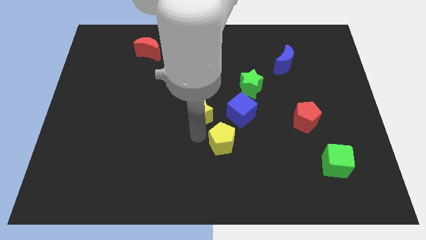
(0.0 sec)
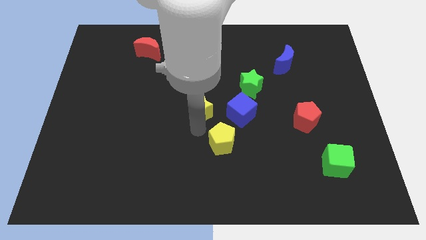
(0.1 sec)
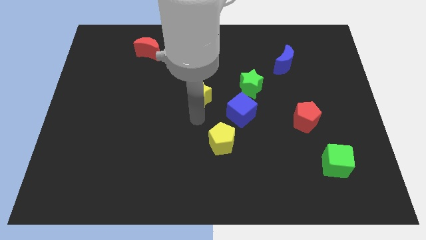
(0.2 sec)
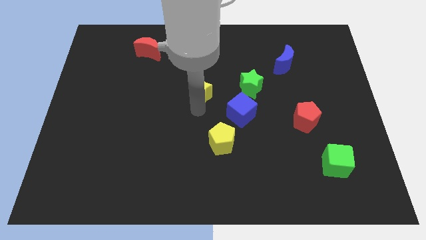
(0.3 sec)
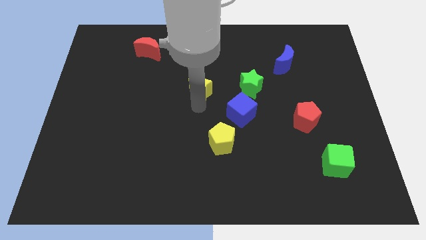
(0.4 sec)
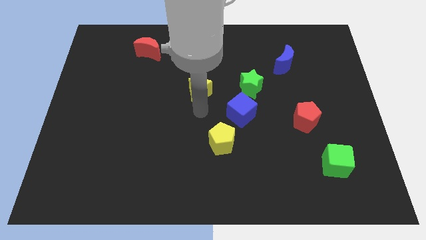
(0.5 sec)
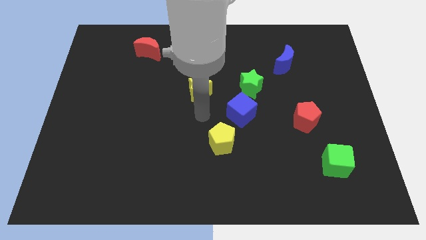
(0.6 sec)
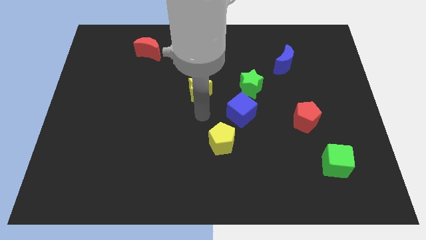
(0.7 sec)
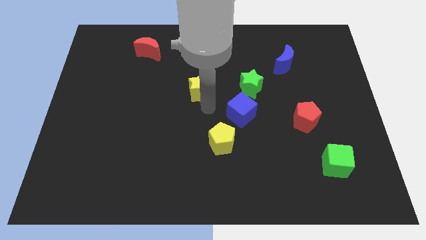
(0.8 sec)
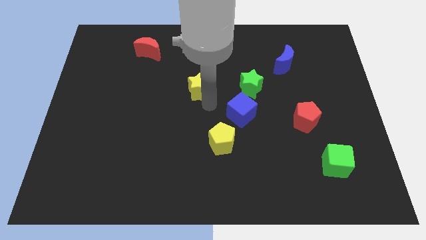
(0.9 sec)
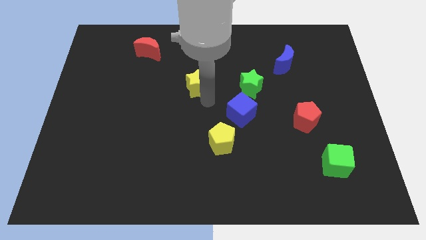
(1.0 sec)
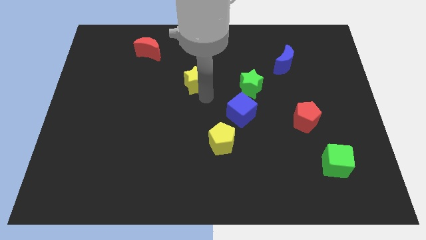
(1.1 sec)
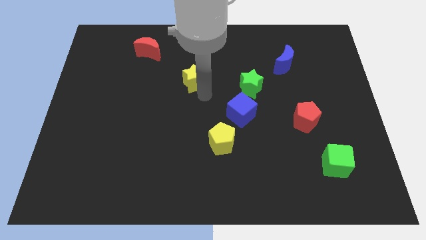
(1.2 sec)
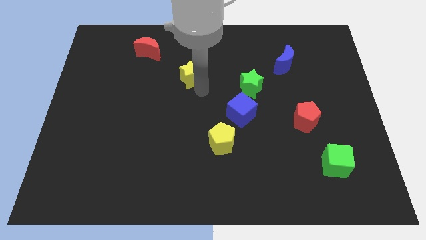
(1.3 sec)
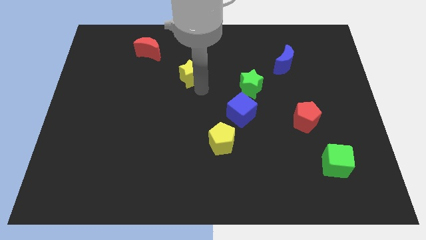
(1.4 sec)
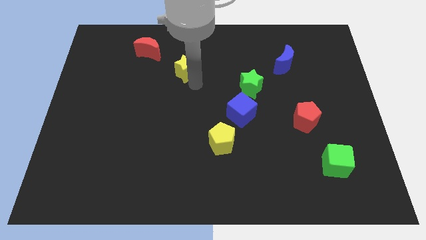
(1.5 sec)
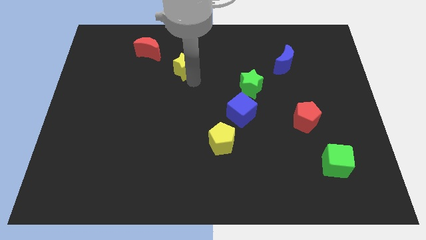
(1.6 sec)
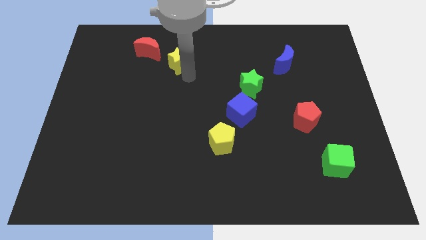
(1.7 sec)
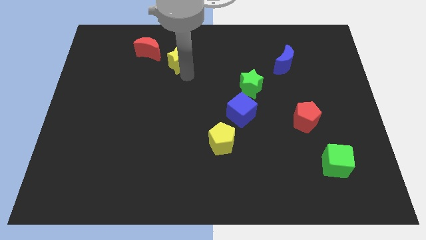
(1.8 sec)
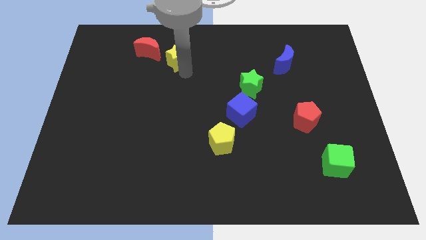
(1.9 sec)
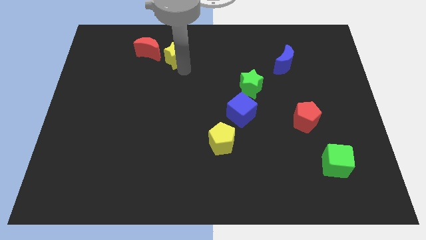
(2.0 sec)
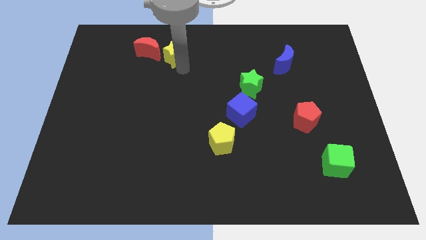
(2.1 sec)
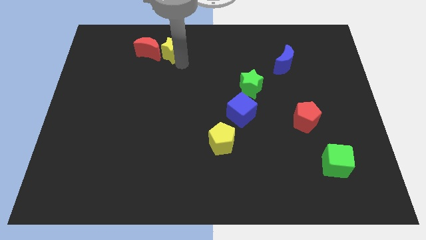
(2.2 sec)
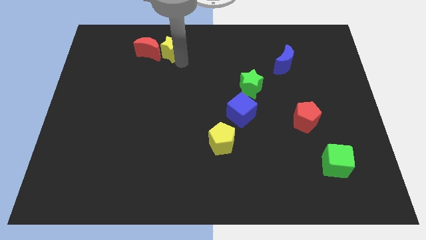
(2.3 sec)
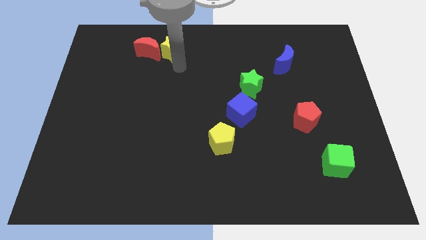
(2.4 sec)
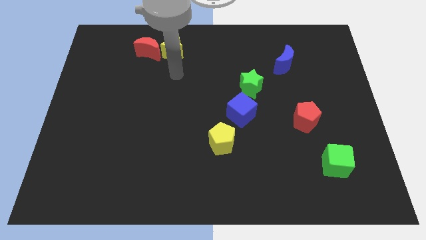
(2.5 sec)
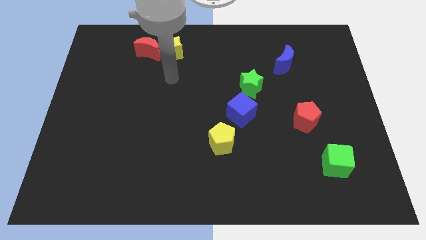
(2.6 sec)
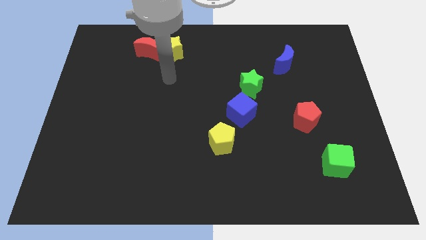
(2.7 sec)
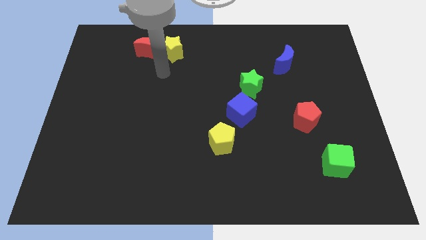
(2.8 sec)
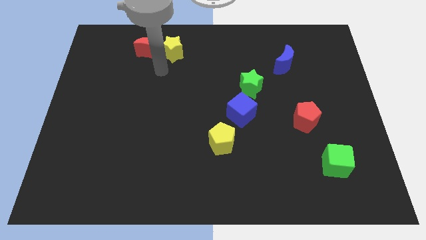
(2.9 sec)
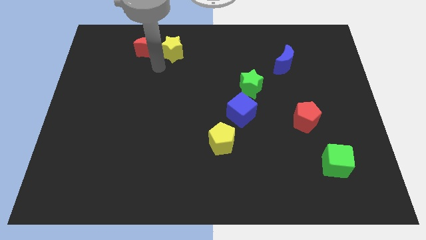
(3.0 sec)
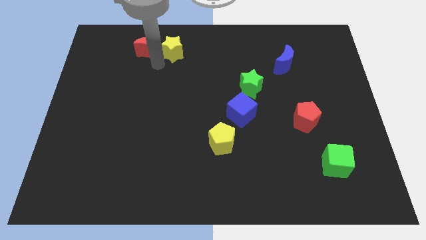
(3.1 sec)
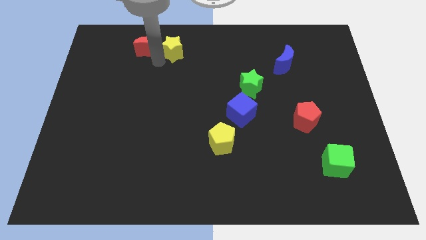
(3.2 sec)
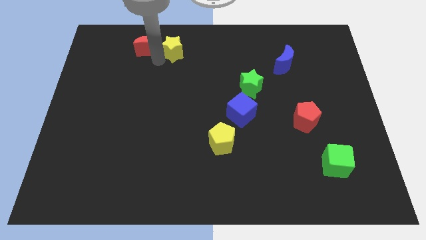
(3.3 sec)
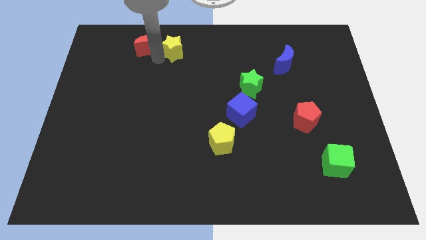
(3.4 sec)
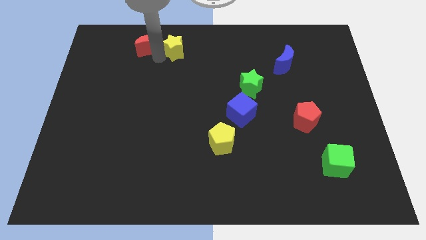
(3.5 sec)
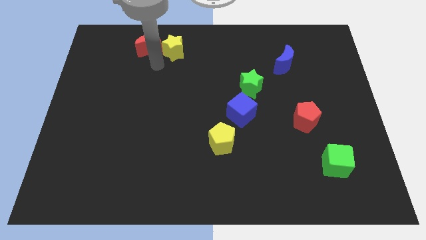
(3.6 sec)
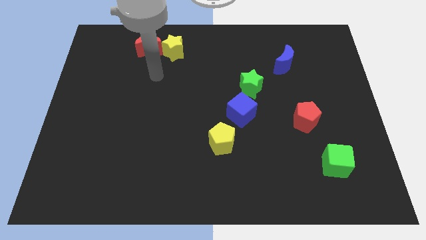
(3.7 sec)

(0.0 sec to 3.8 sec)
place the yellow star right to the red moon

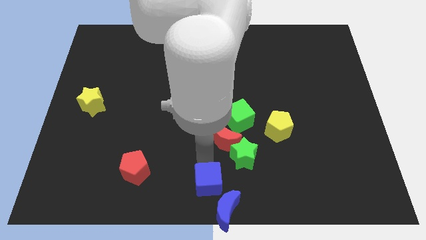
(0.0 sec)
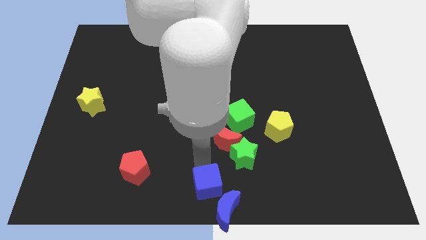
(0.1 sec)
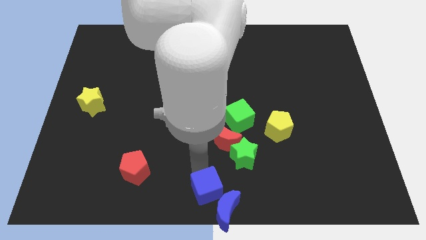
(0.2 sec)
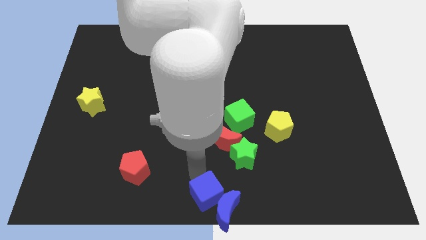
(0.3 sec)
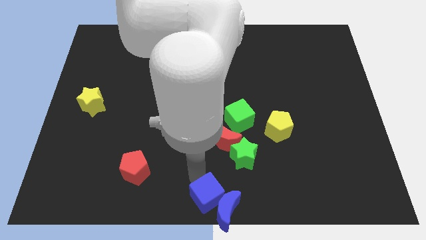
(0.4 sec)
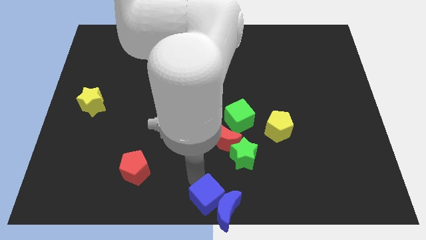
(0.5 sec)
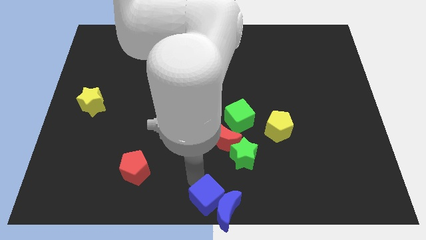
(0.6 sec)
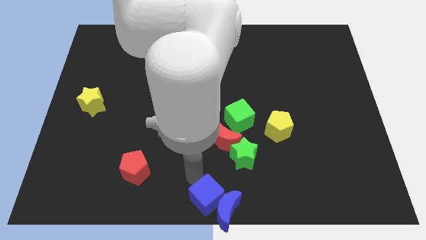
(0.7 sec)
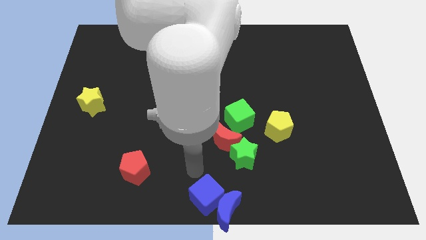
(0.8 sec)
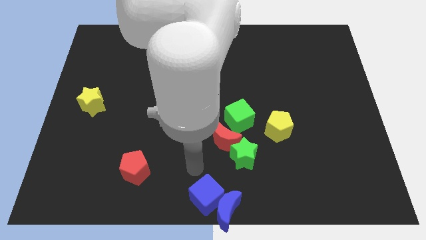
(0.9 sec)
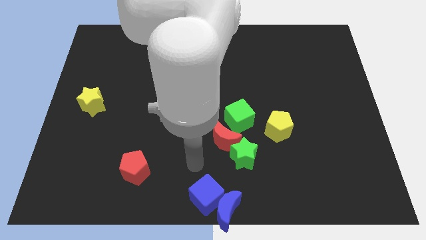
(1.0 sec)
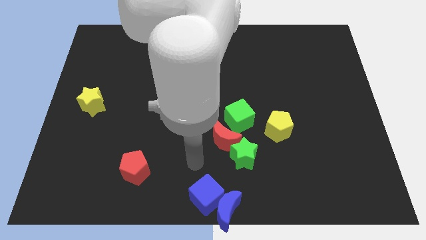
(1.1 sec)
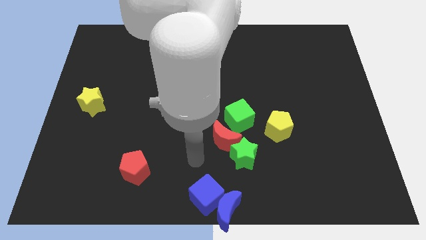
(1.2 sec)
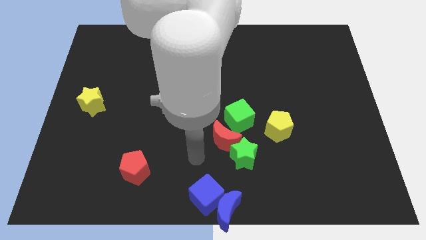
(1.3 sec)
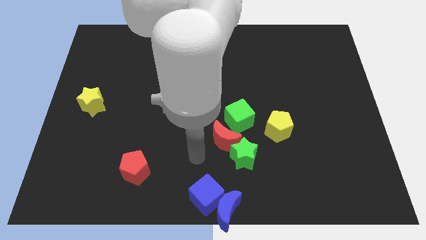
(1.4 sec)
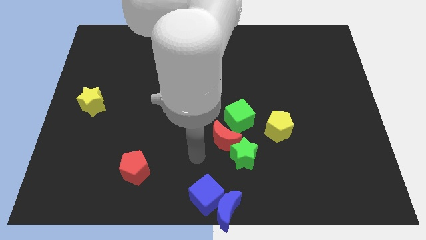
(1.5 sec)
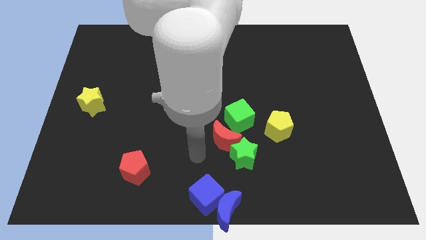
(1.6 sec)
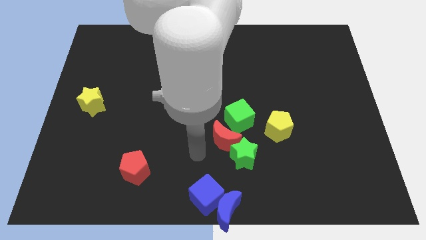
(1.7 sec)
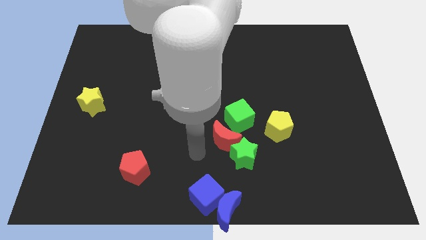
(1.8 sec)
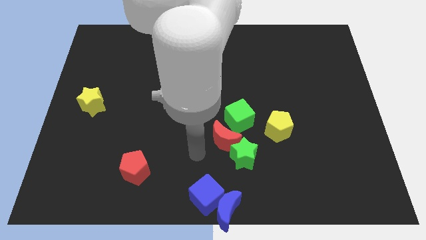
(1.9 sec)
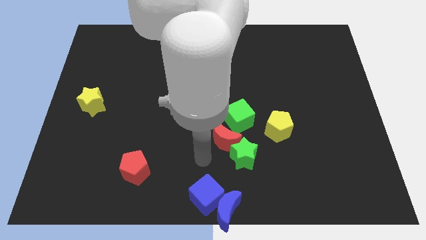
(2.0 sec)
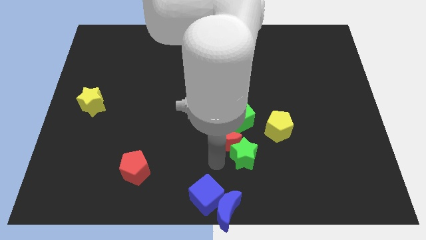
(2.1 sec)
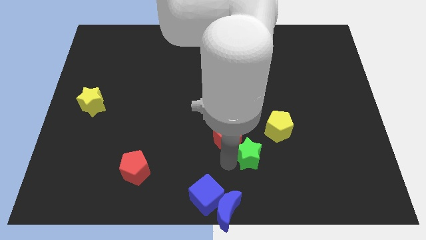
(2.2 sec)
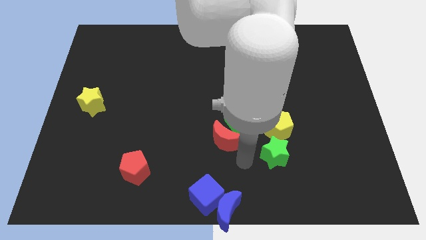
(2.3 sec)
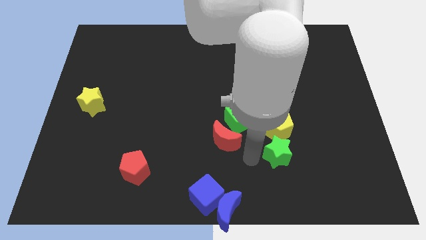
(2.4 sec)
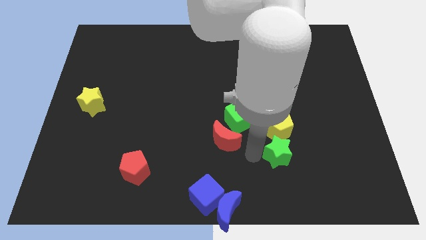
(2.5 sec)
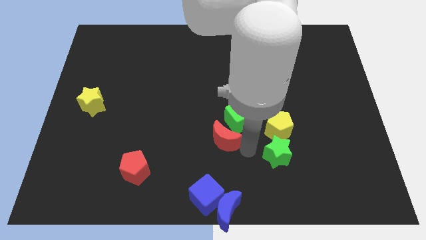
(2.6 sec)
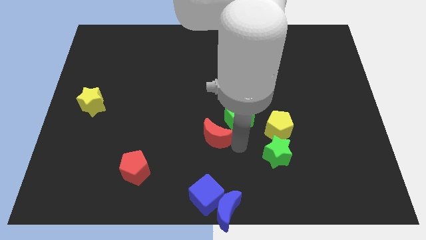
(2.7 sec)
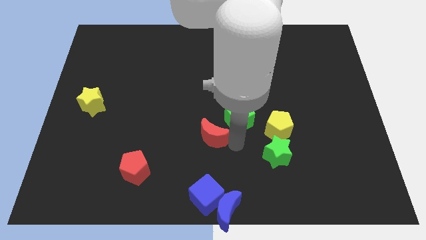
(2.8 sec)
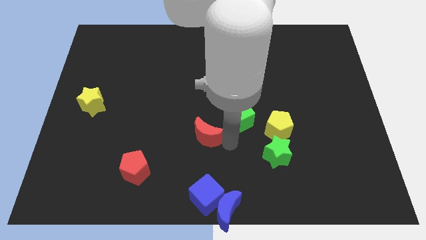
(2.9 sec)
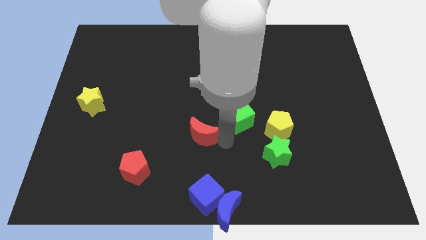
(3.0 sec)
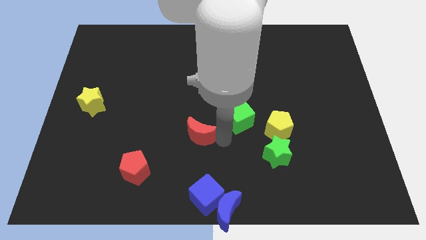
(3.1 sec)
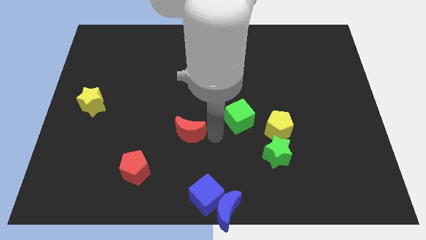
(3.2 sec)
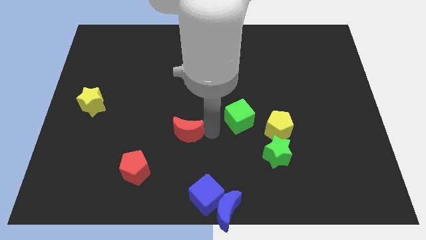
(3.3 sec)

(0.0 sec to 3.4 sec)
place the red moon in between the green cube and red pentagon

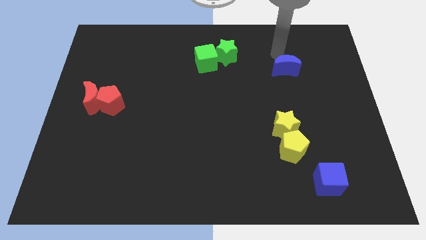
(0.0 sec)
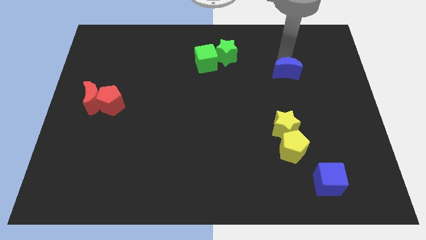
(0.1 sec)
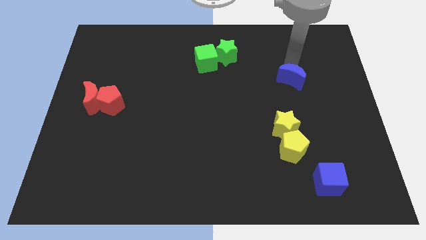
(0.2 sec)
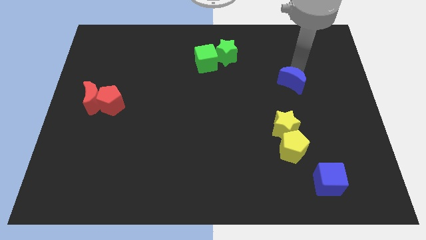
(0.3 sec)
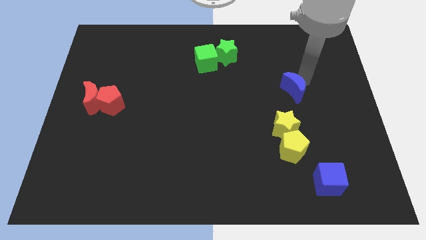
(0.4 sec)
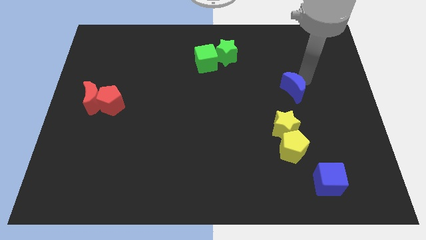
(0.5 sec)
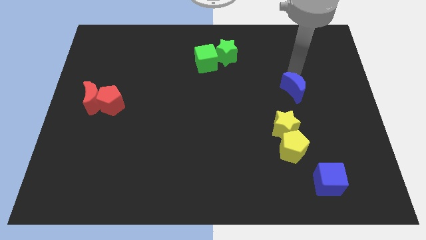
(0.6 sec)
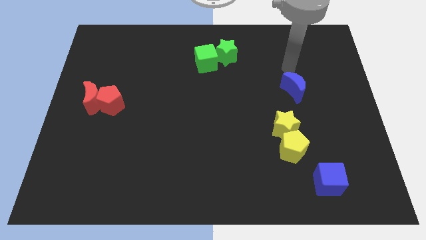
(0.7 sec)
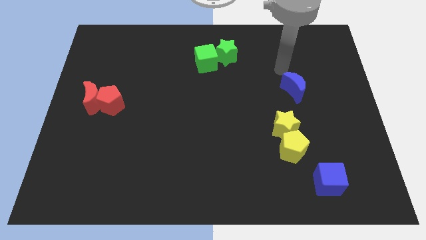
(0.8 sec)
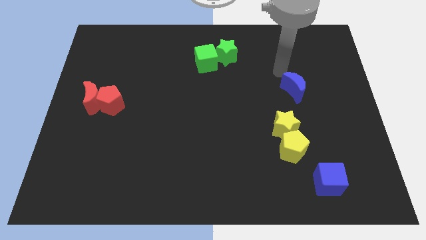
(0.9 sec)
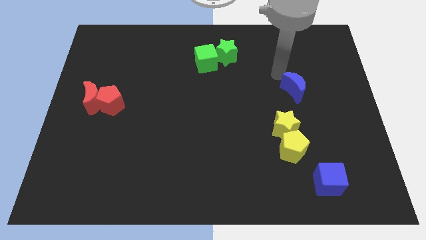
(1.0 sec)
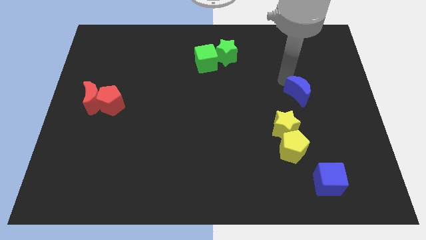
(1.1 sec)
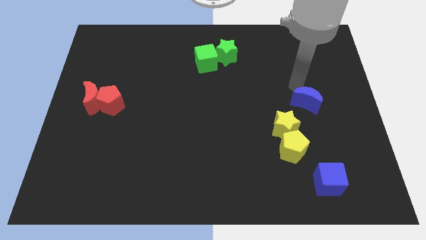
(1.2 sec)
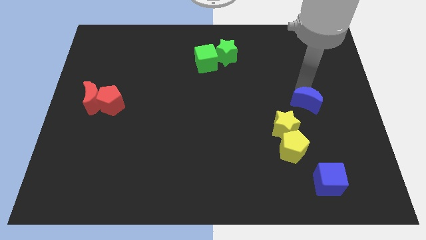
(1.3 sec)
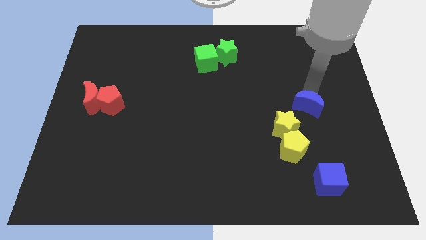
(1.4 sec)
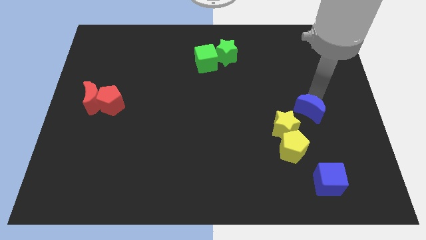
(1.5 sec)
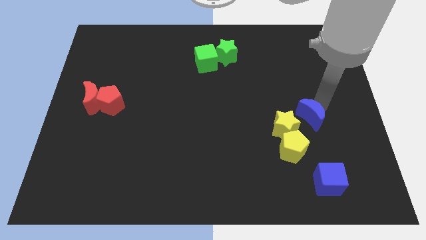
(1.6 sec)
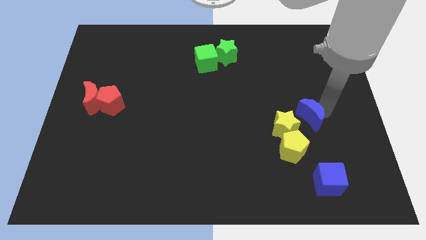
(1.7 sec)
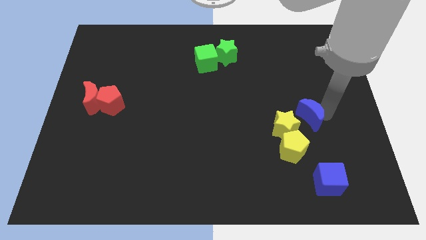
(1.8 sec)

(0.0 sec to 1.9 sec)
place the blue crescent close to yellow star
